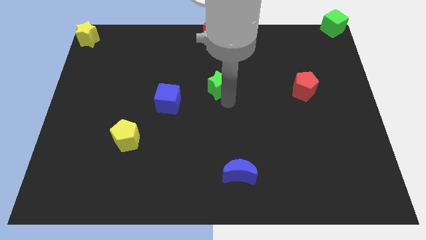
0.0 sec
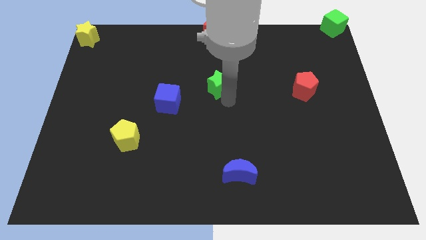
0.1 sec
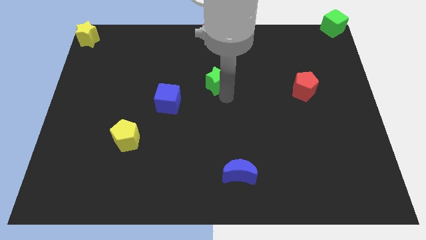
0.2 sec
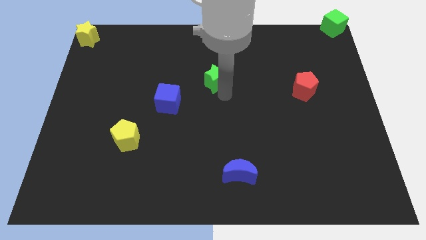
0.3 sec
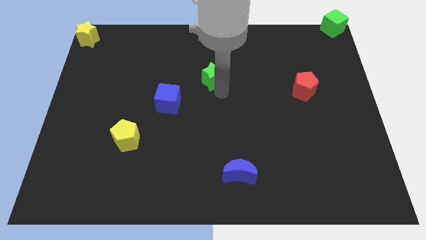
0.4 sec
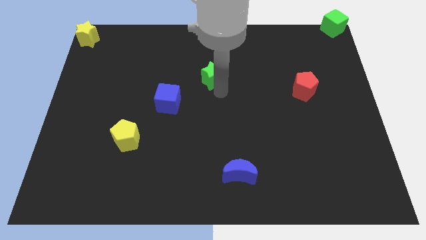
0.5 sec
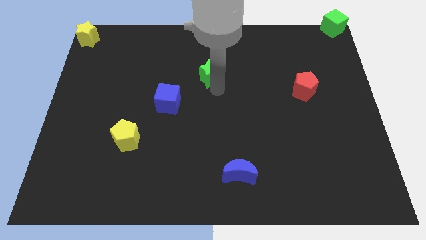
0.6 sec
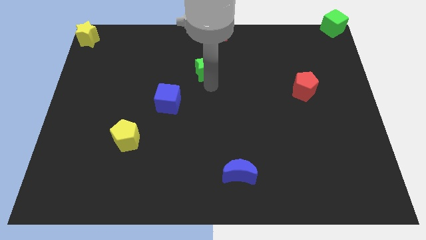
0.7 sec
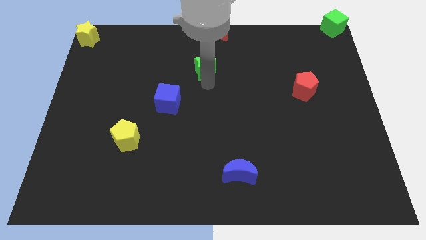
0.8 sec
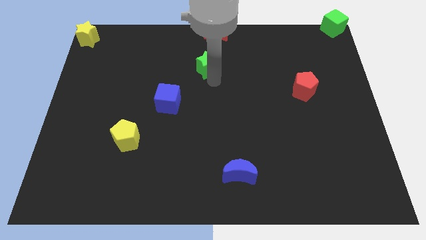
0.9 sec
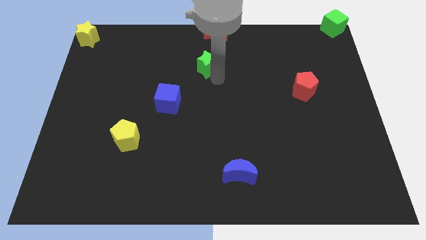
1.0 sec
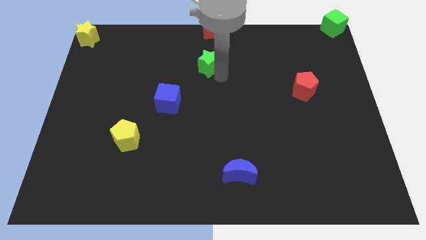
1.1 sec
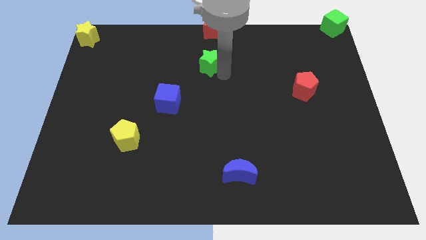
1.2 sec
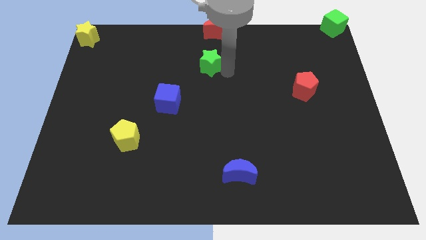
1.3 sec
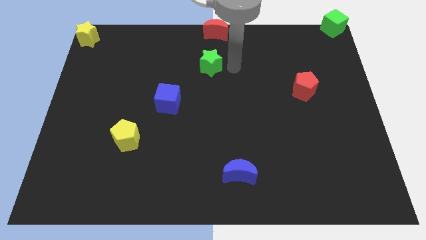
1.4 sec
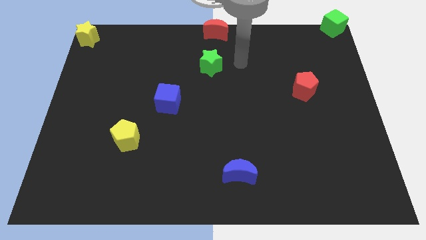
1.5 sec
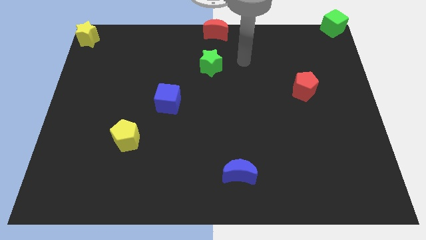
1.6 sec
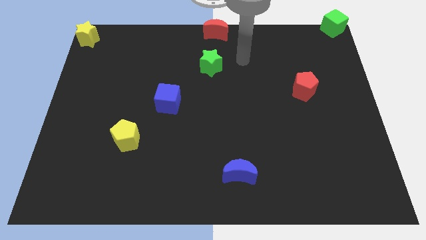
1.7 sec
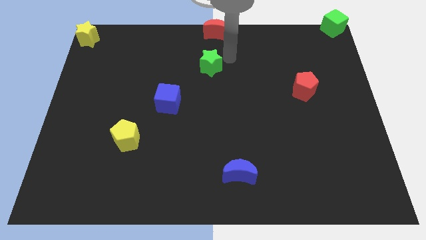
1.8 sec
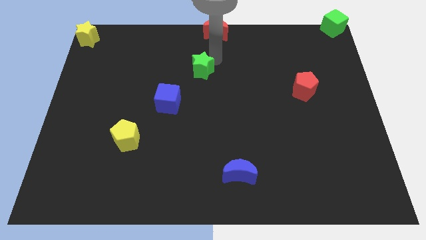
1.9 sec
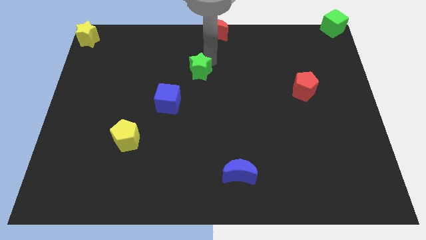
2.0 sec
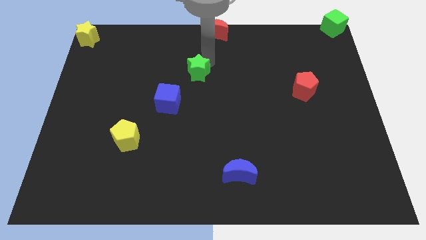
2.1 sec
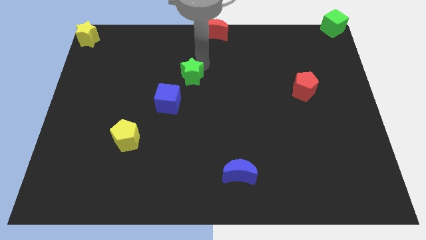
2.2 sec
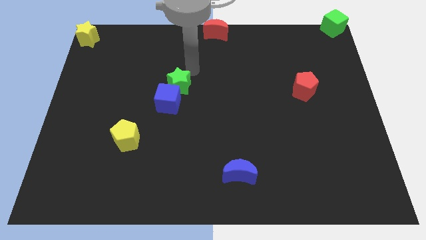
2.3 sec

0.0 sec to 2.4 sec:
place the green star at the top of blue cube

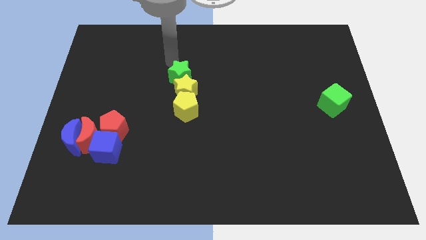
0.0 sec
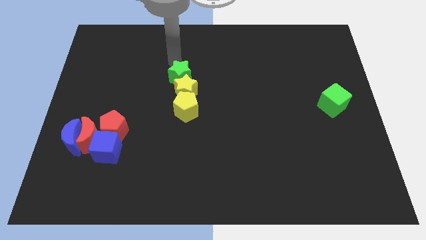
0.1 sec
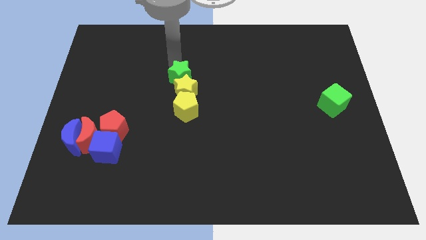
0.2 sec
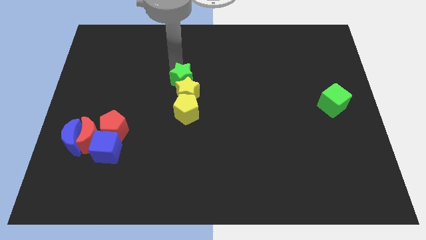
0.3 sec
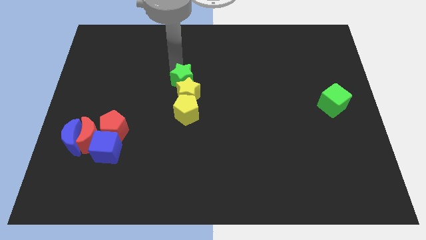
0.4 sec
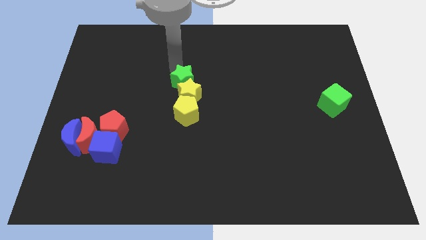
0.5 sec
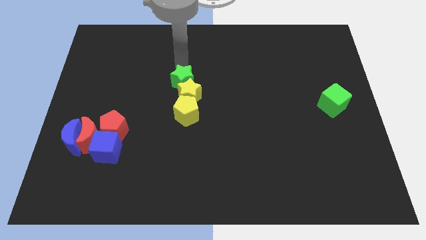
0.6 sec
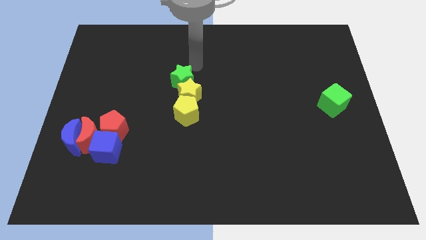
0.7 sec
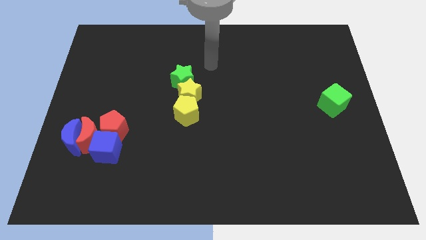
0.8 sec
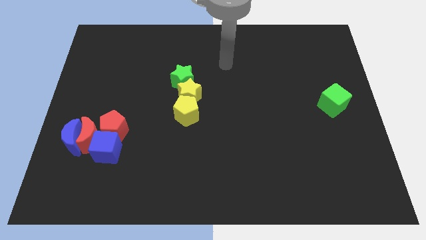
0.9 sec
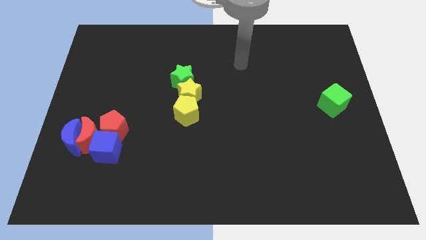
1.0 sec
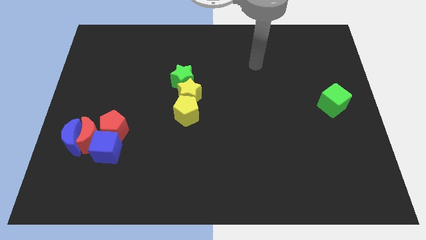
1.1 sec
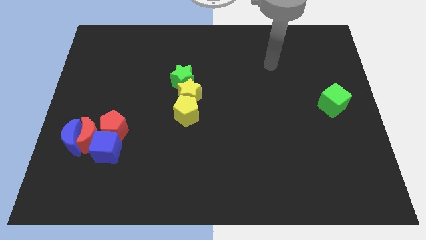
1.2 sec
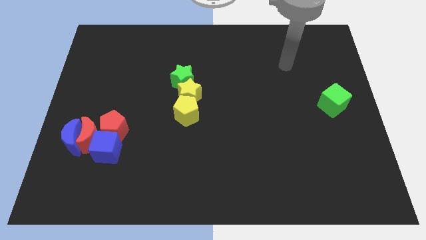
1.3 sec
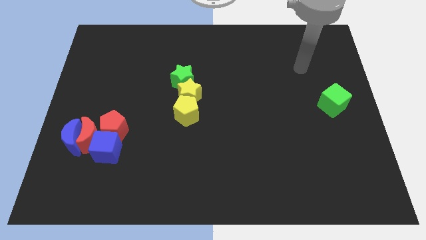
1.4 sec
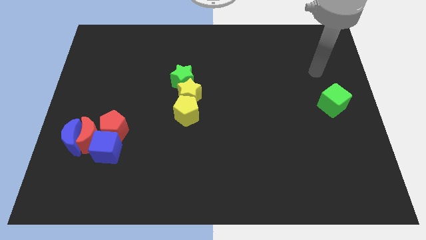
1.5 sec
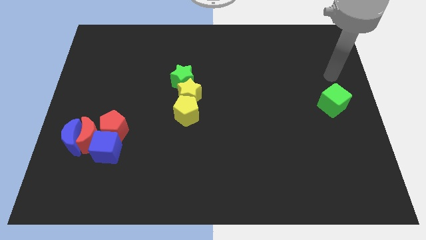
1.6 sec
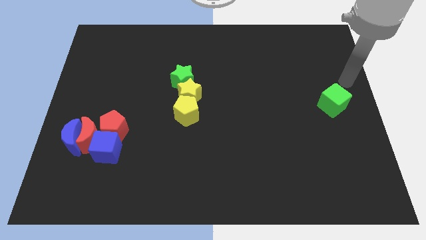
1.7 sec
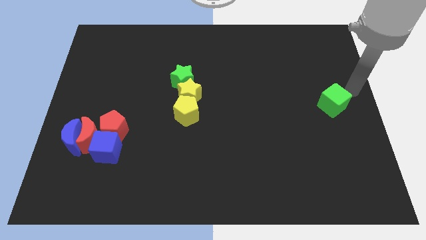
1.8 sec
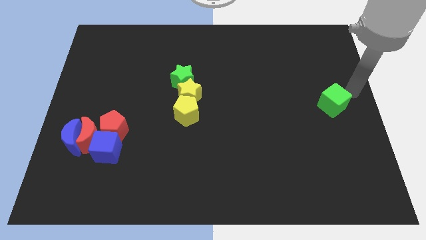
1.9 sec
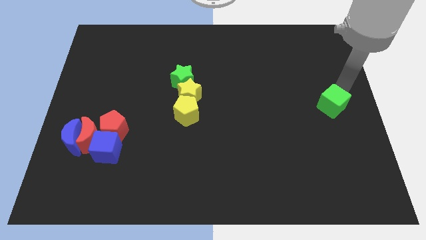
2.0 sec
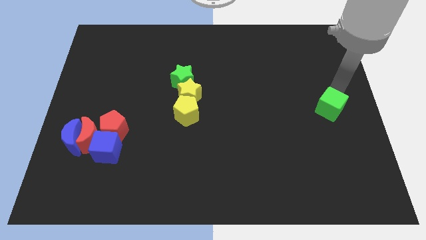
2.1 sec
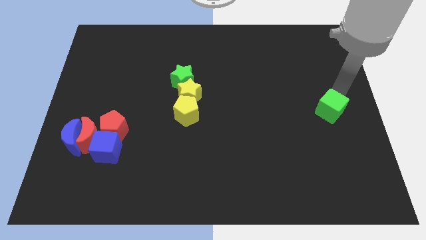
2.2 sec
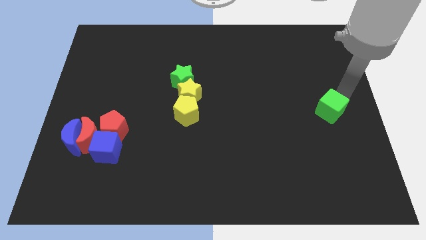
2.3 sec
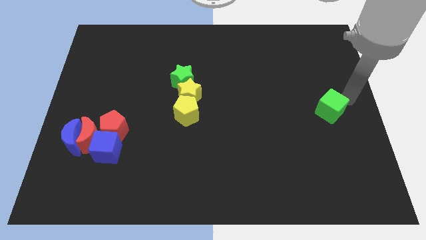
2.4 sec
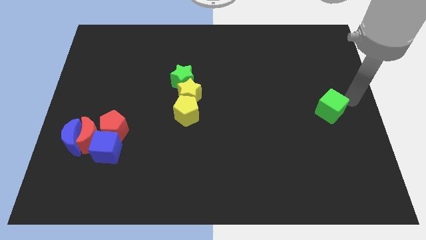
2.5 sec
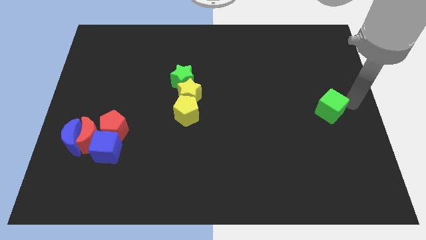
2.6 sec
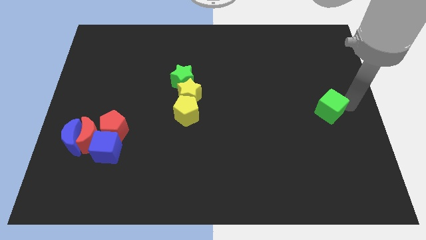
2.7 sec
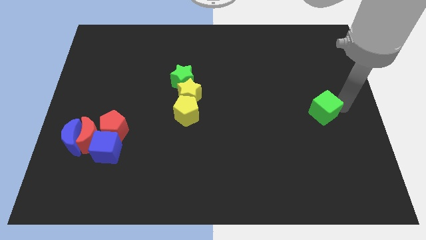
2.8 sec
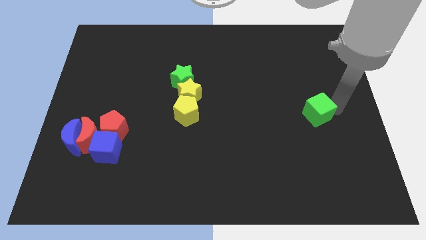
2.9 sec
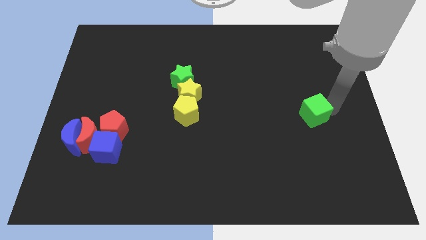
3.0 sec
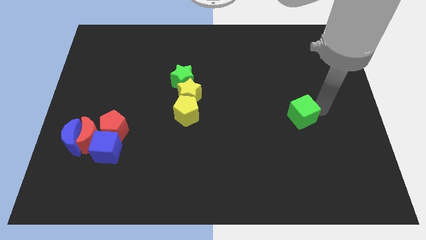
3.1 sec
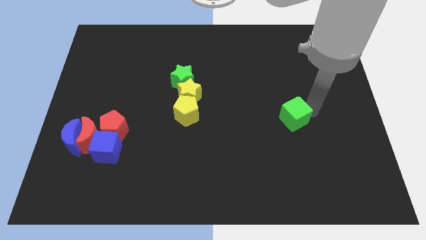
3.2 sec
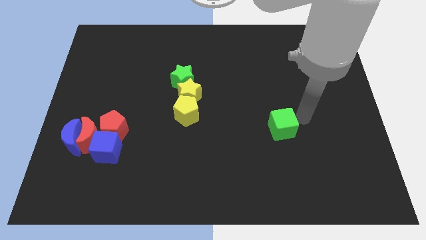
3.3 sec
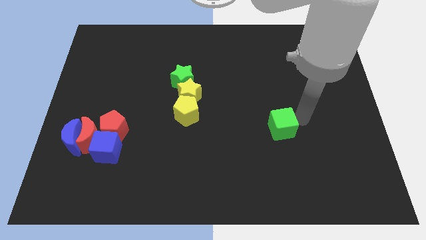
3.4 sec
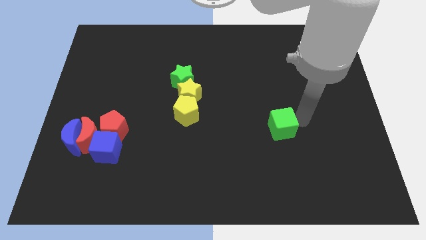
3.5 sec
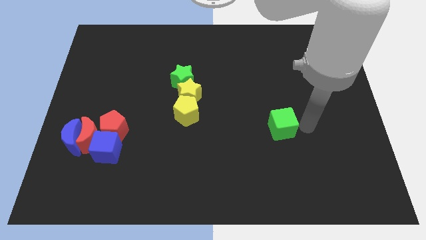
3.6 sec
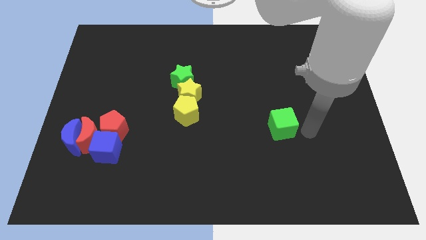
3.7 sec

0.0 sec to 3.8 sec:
move the green cube slightly to the left

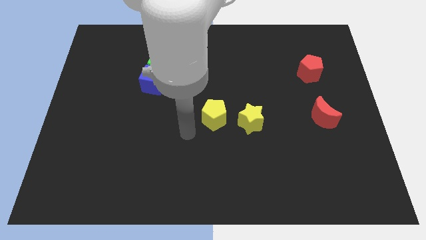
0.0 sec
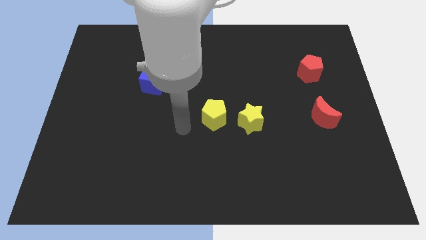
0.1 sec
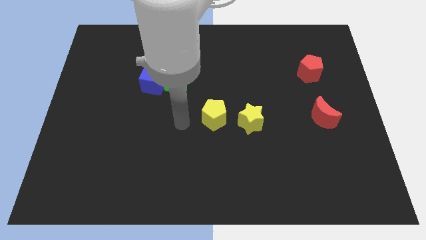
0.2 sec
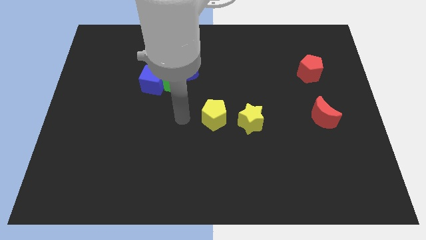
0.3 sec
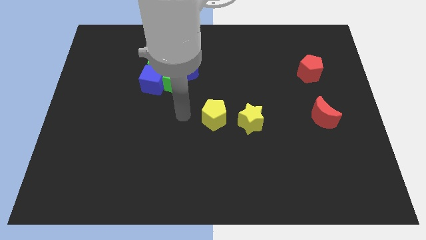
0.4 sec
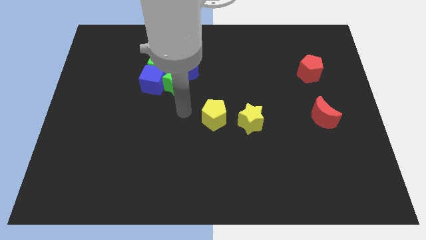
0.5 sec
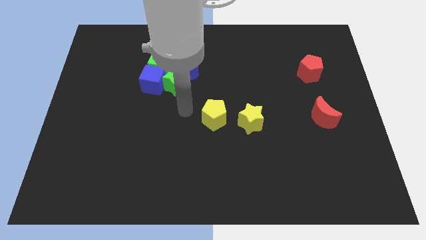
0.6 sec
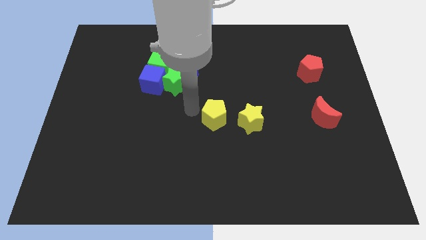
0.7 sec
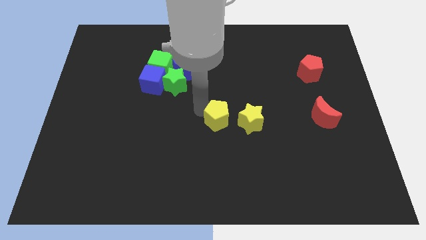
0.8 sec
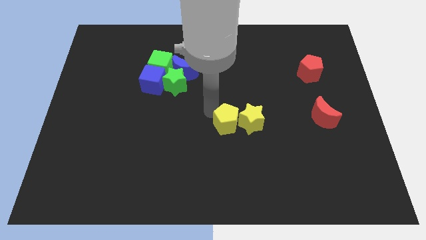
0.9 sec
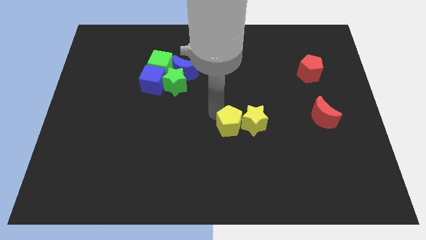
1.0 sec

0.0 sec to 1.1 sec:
push yellow pentagon close to yellow star

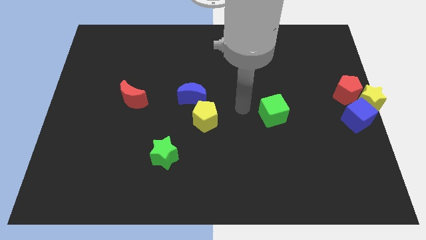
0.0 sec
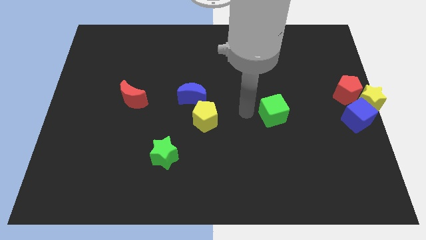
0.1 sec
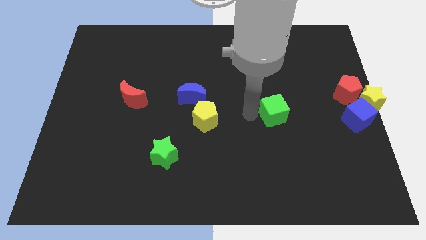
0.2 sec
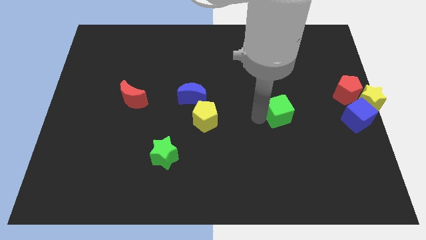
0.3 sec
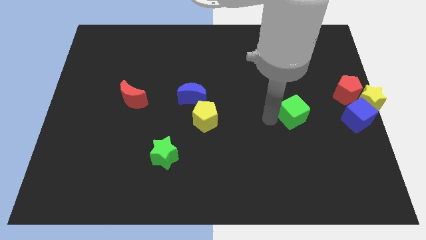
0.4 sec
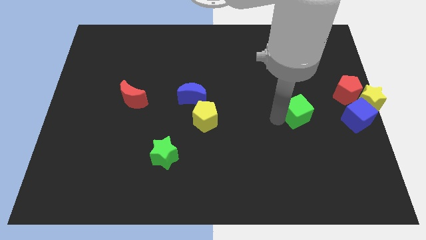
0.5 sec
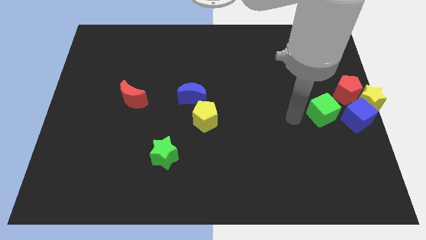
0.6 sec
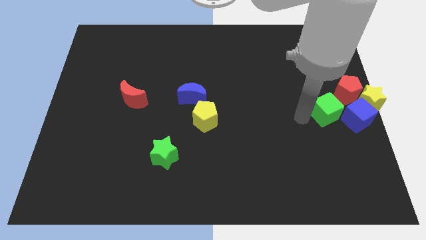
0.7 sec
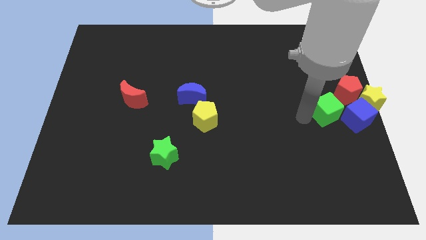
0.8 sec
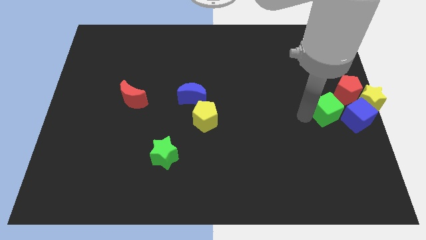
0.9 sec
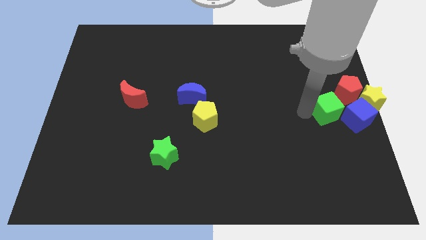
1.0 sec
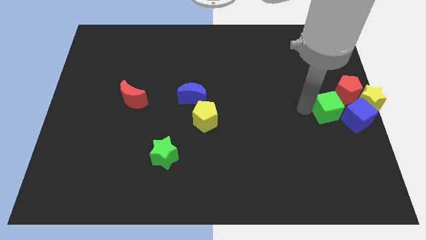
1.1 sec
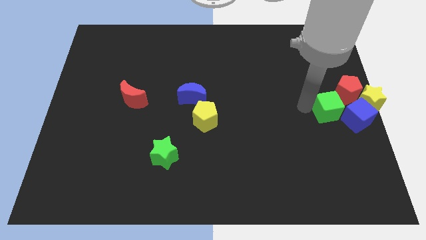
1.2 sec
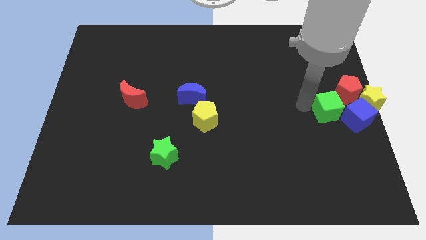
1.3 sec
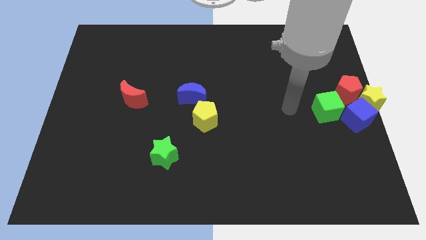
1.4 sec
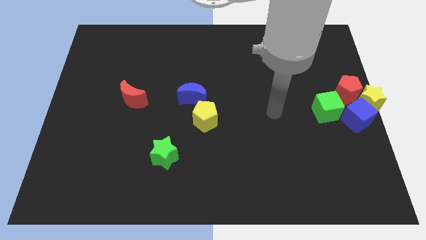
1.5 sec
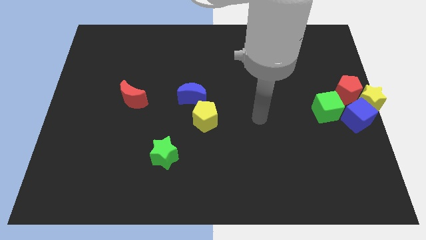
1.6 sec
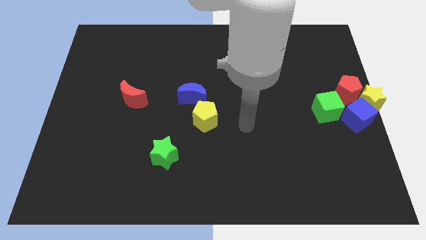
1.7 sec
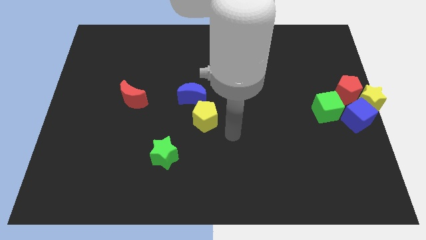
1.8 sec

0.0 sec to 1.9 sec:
move the green cube close to the blue cube
